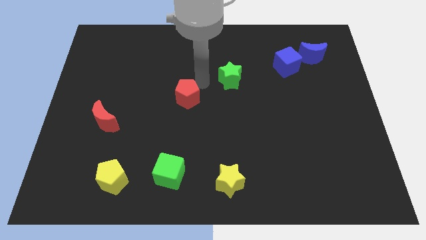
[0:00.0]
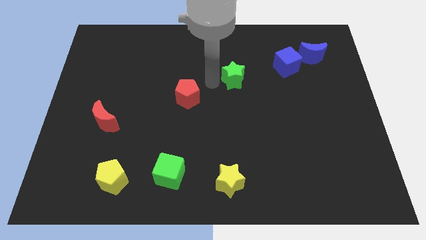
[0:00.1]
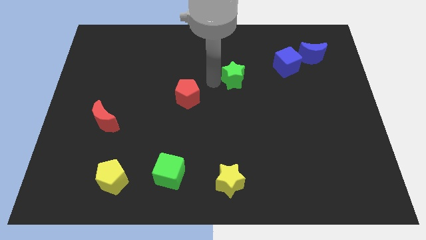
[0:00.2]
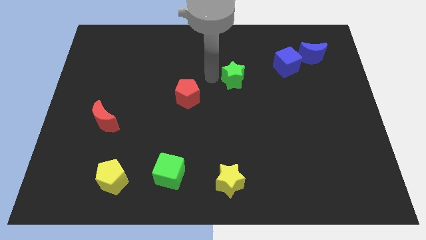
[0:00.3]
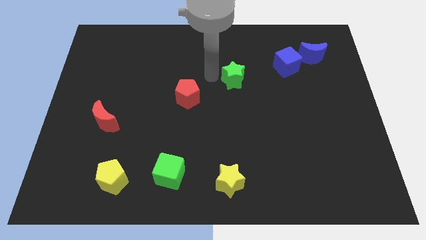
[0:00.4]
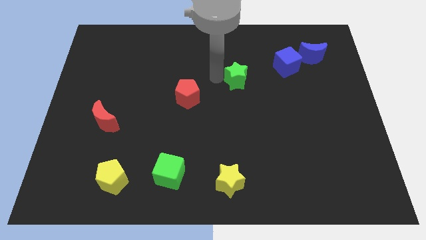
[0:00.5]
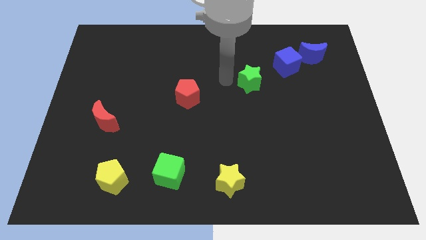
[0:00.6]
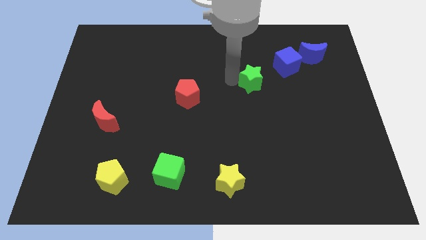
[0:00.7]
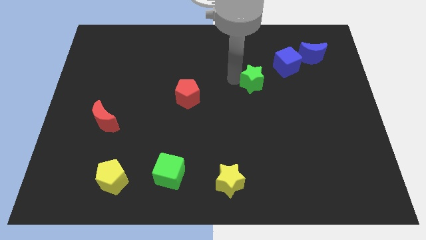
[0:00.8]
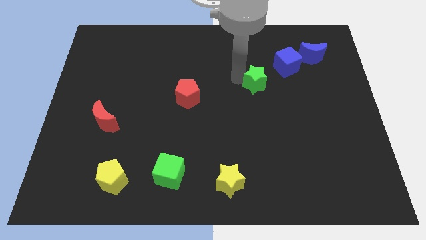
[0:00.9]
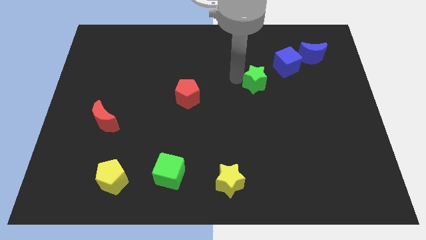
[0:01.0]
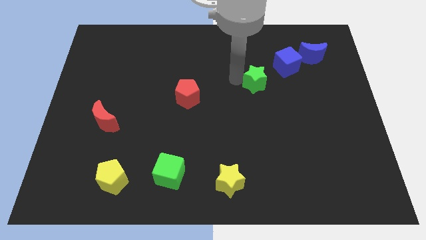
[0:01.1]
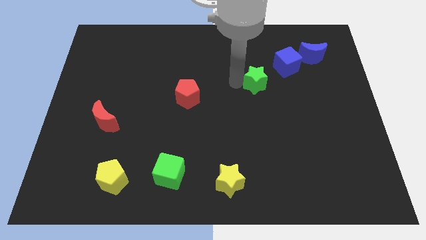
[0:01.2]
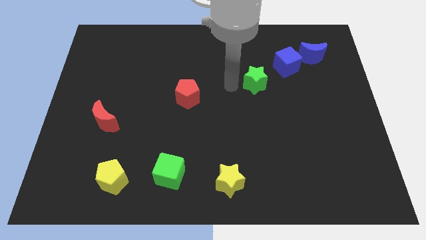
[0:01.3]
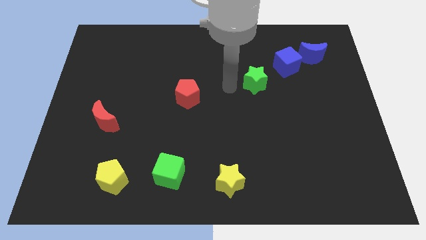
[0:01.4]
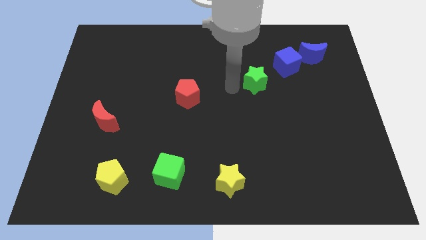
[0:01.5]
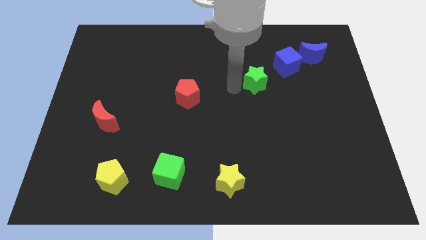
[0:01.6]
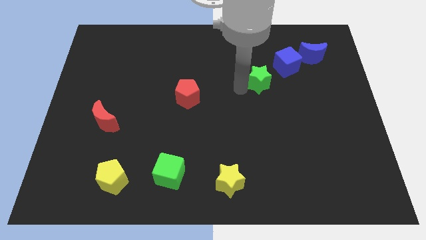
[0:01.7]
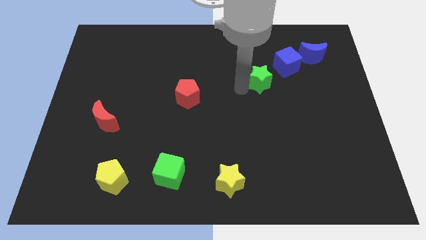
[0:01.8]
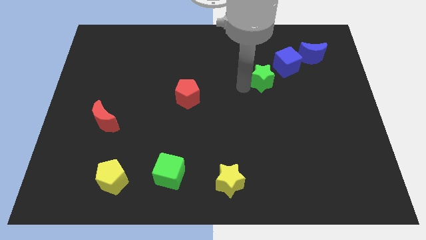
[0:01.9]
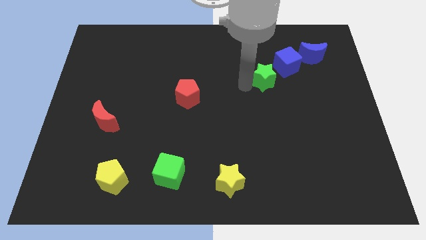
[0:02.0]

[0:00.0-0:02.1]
push green star towards blue cube

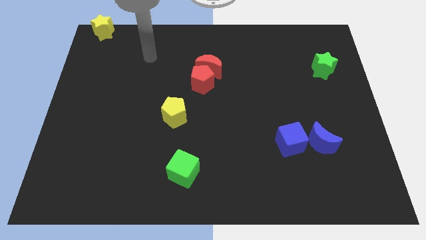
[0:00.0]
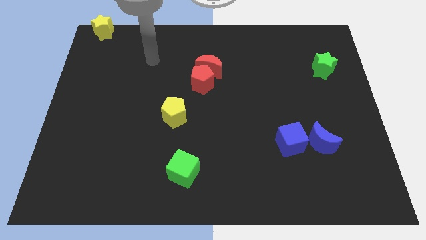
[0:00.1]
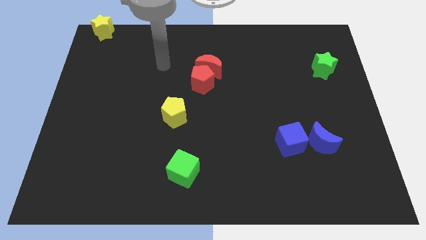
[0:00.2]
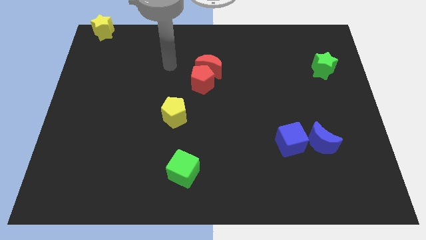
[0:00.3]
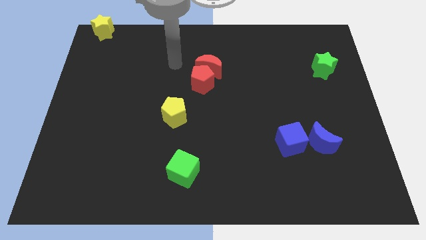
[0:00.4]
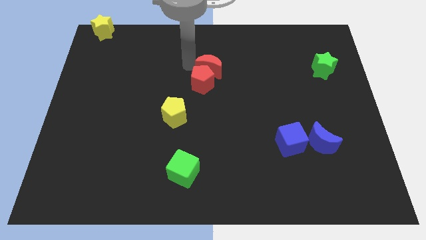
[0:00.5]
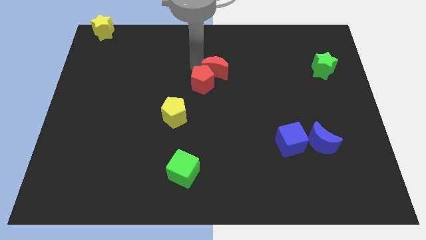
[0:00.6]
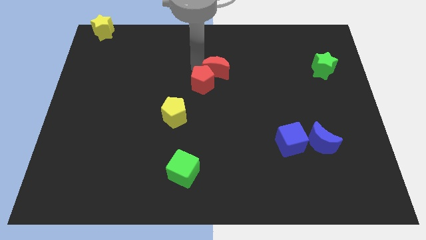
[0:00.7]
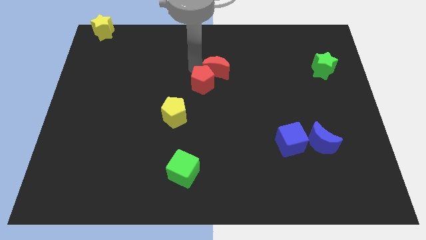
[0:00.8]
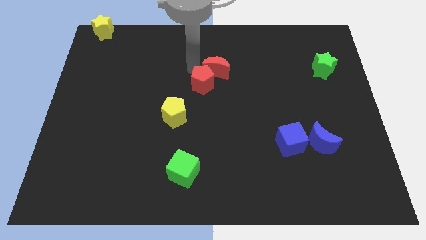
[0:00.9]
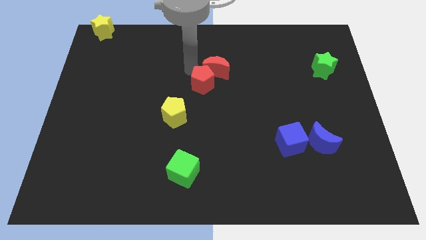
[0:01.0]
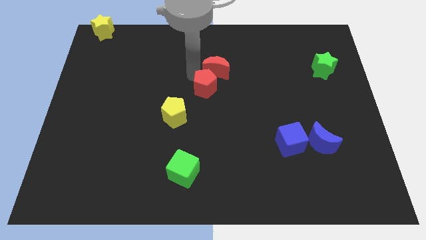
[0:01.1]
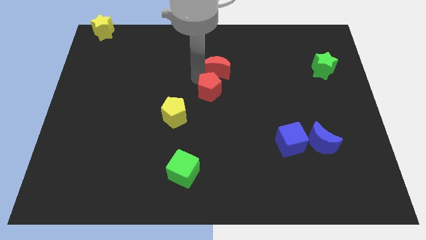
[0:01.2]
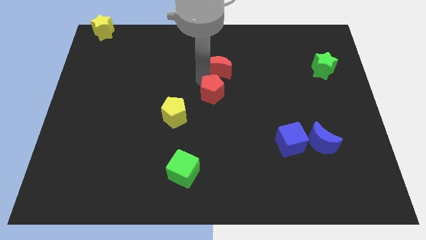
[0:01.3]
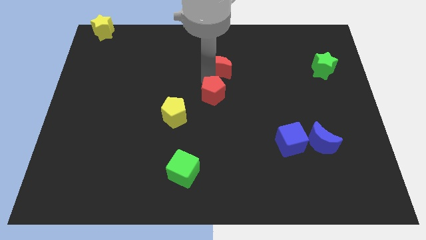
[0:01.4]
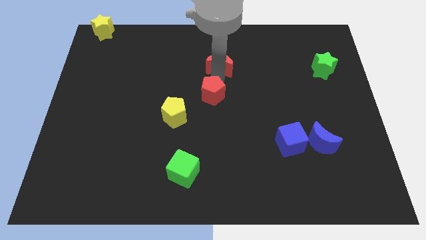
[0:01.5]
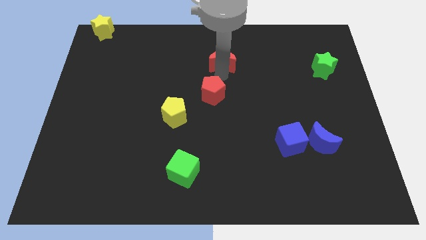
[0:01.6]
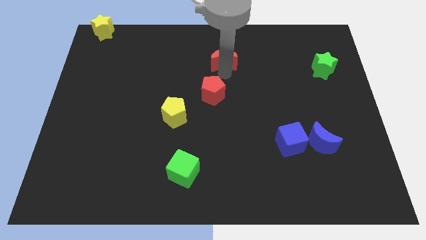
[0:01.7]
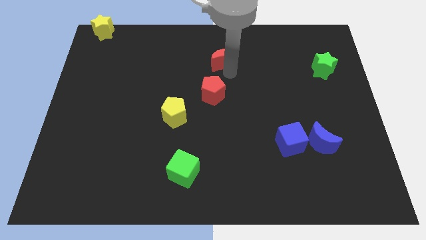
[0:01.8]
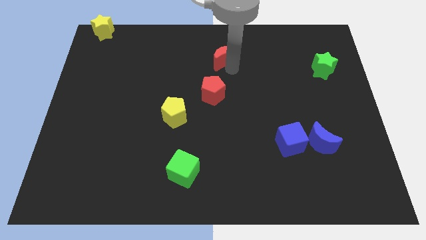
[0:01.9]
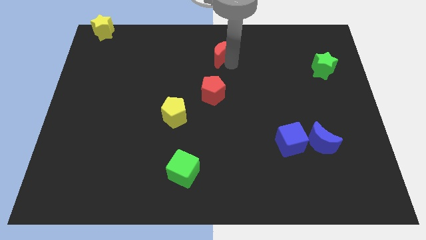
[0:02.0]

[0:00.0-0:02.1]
separate the red blocks at the center

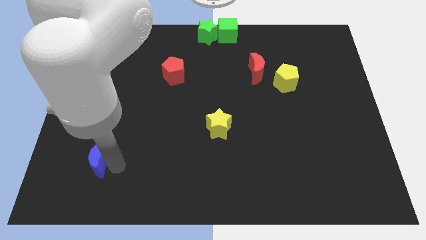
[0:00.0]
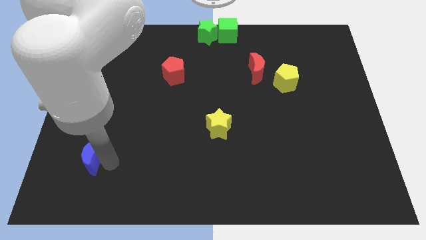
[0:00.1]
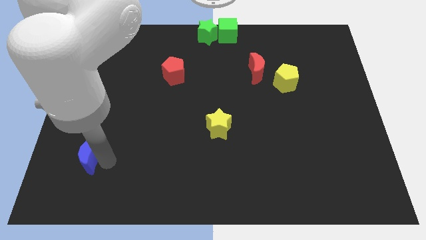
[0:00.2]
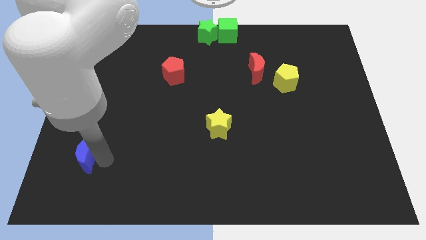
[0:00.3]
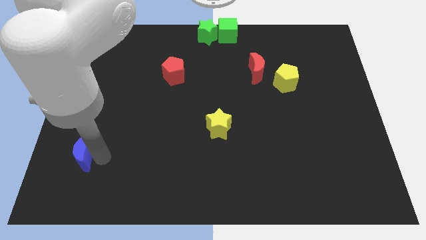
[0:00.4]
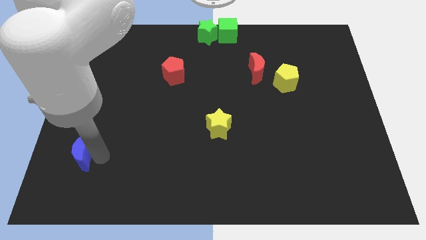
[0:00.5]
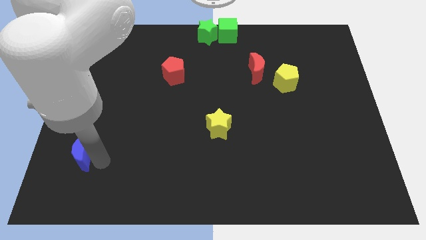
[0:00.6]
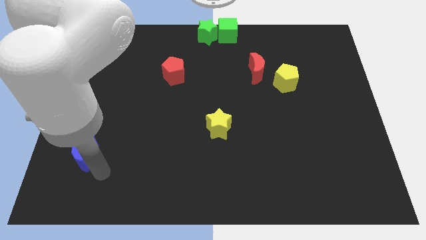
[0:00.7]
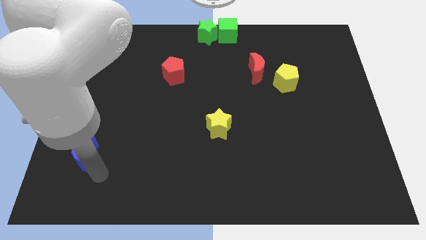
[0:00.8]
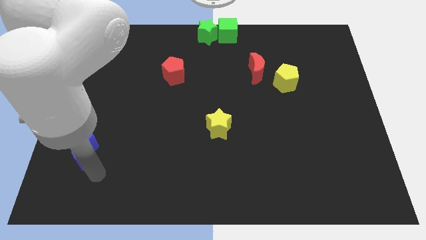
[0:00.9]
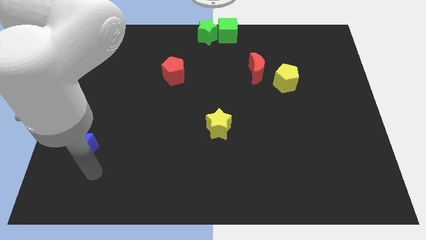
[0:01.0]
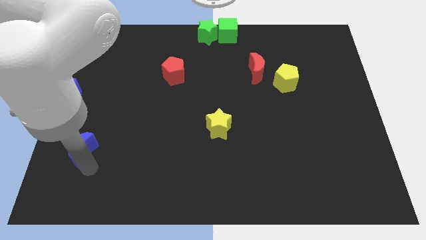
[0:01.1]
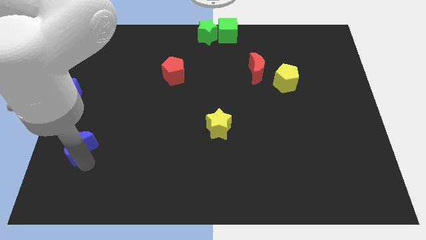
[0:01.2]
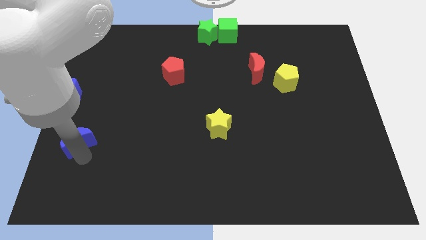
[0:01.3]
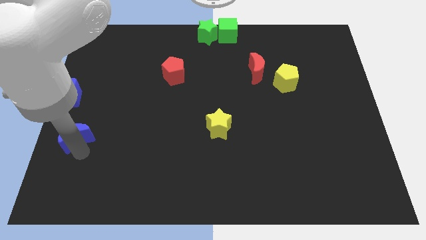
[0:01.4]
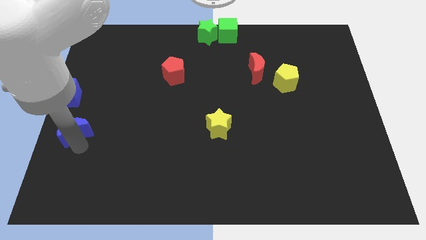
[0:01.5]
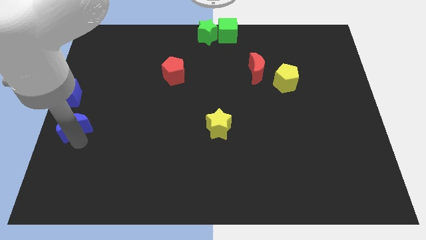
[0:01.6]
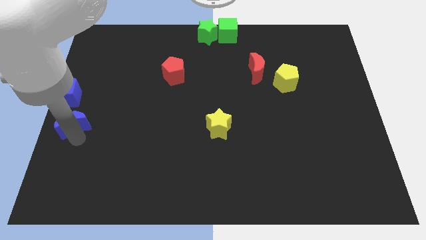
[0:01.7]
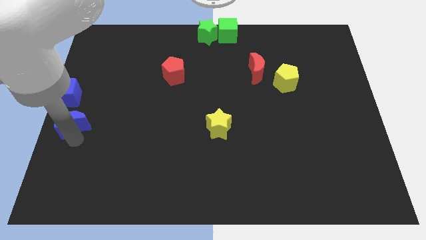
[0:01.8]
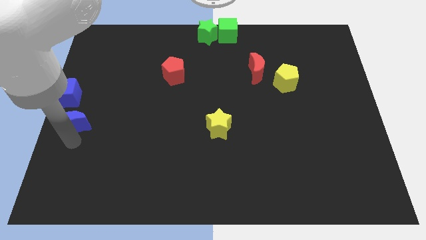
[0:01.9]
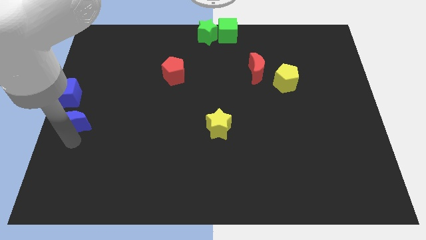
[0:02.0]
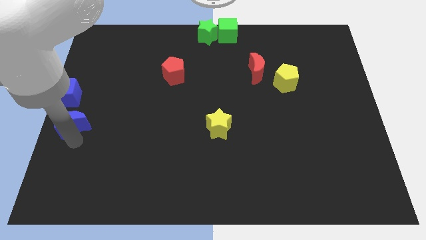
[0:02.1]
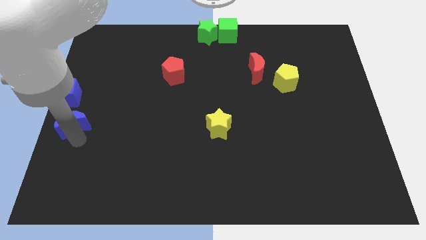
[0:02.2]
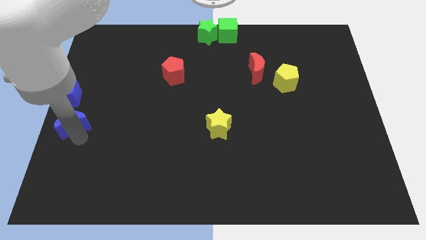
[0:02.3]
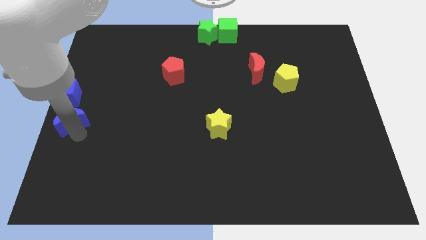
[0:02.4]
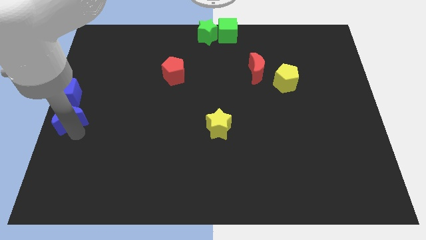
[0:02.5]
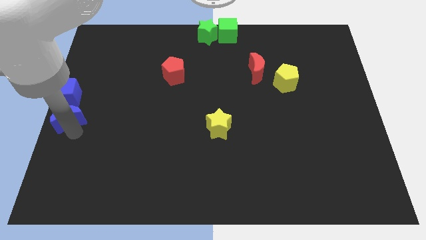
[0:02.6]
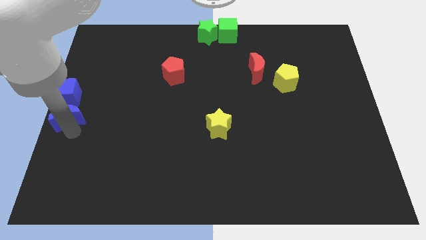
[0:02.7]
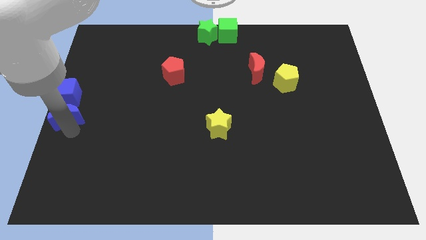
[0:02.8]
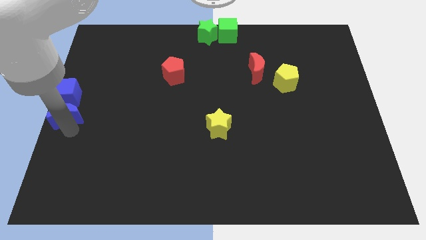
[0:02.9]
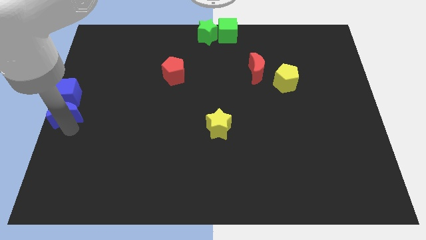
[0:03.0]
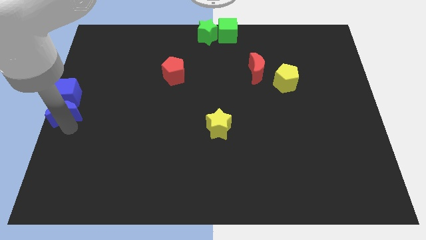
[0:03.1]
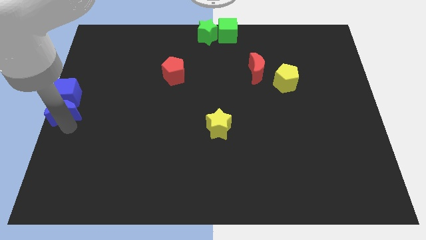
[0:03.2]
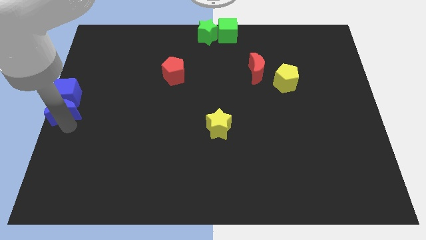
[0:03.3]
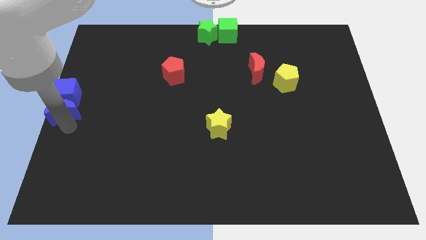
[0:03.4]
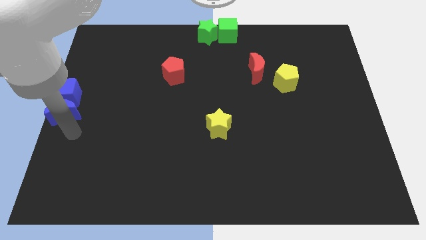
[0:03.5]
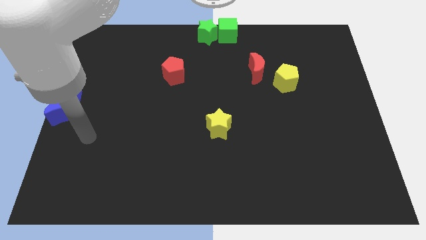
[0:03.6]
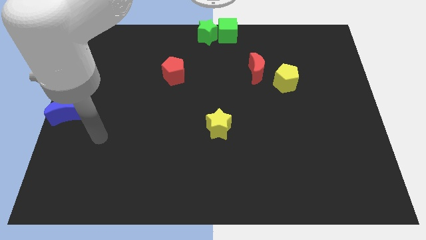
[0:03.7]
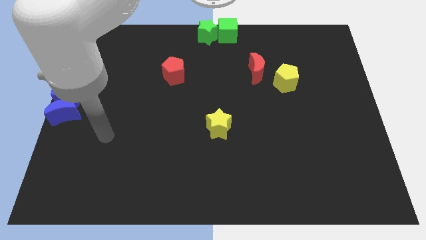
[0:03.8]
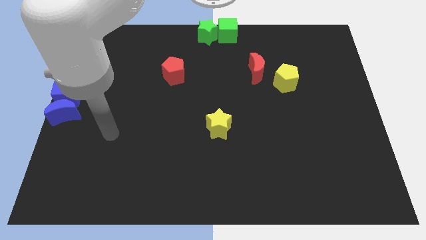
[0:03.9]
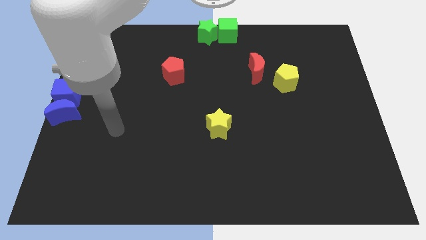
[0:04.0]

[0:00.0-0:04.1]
place the blue crescent to the bottom of the blue cube

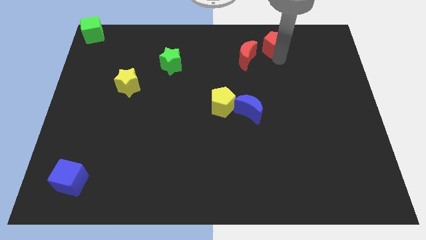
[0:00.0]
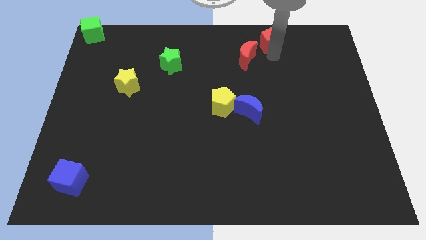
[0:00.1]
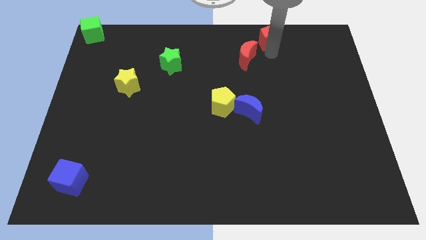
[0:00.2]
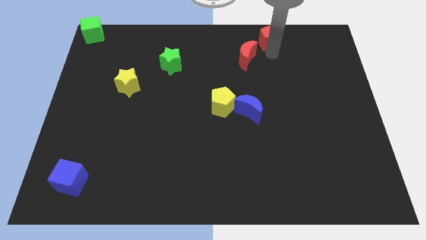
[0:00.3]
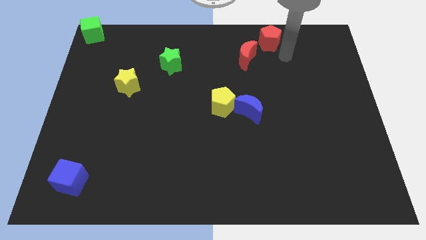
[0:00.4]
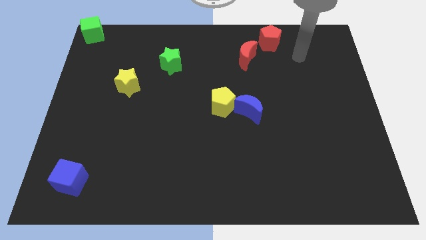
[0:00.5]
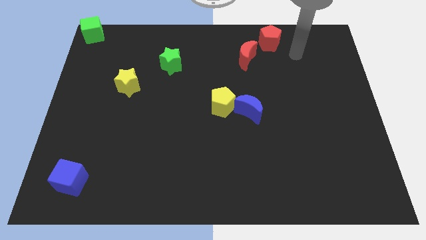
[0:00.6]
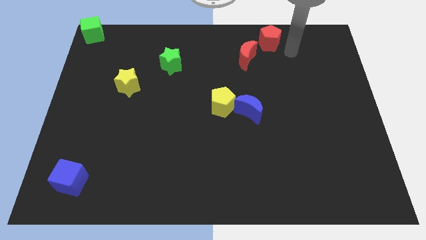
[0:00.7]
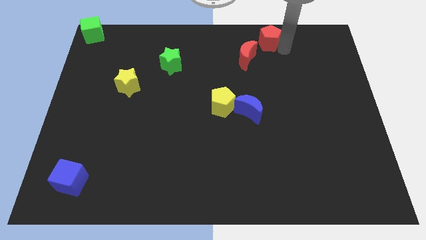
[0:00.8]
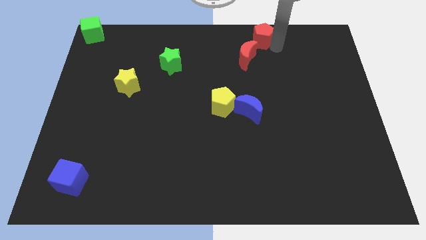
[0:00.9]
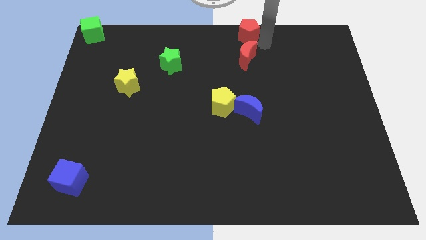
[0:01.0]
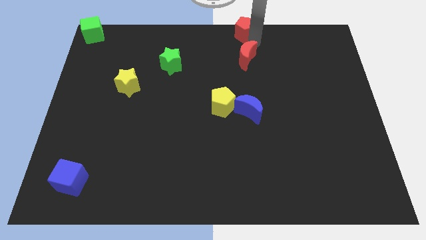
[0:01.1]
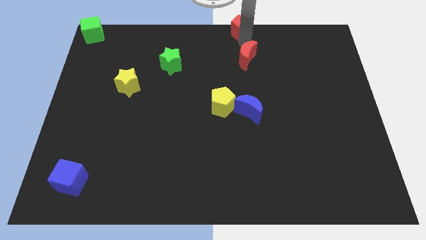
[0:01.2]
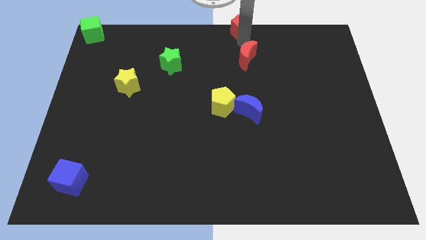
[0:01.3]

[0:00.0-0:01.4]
place the red pentagon on top of the red crescent
